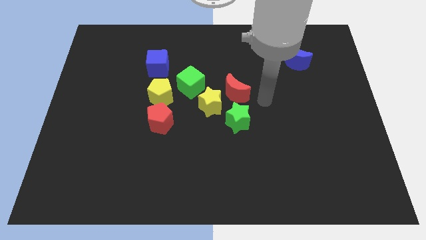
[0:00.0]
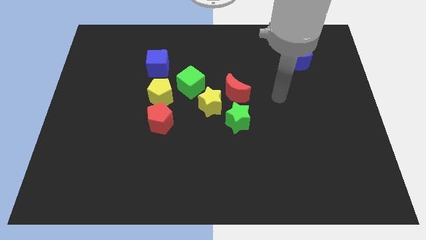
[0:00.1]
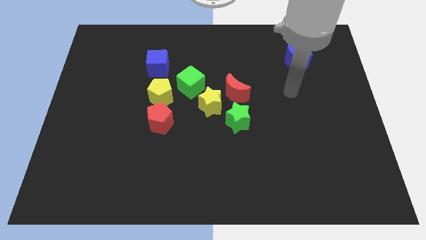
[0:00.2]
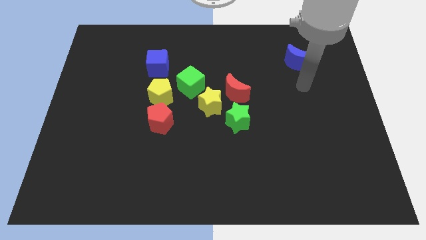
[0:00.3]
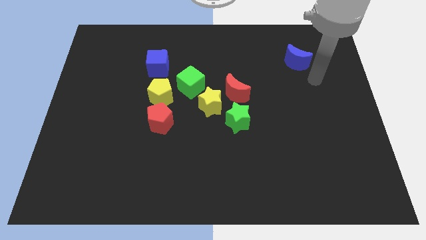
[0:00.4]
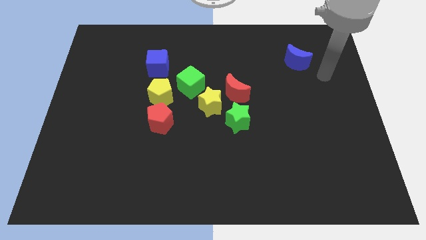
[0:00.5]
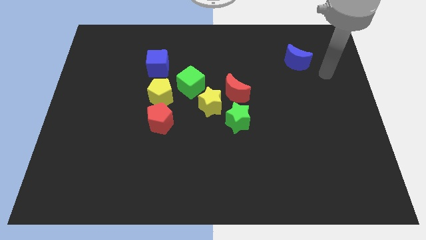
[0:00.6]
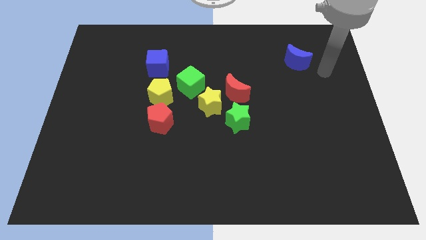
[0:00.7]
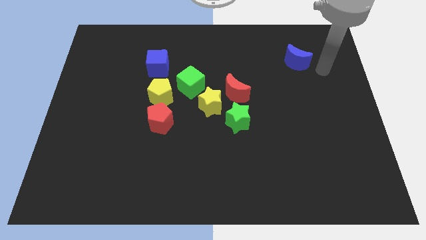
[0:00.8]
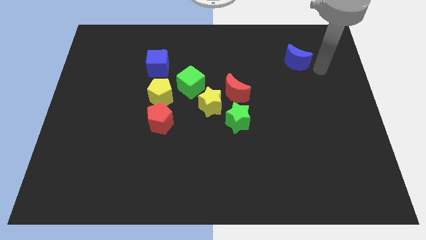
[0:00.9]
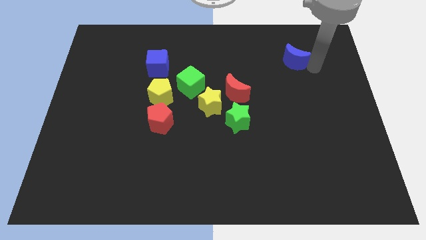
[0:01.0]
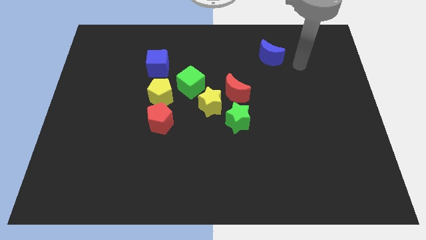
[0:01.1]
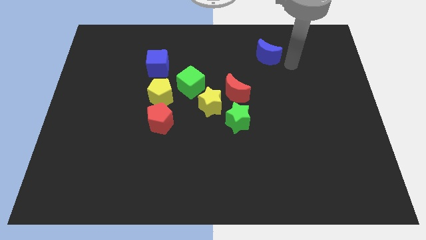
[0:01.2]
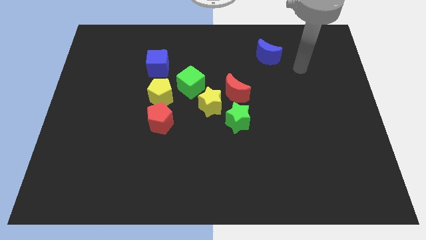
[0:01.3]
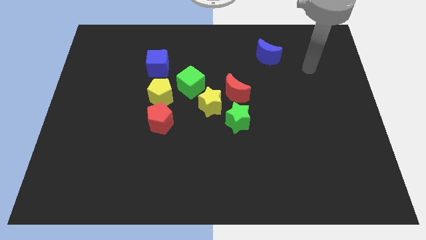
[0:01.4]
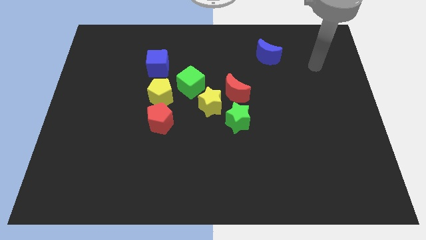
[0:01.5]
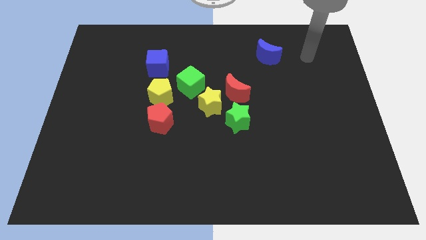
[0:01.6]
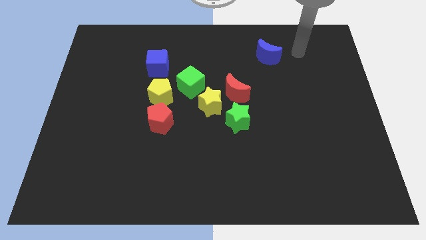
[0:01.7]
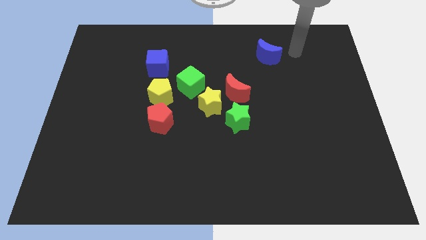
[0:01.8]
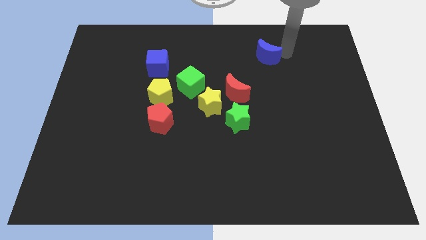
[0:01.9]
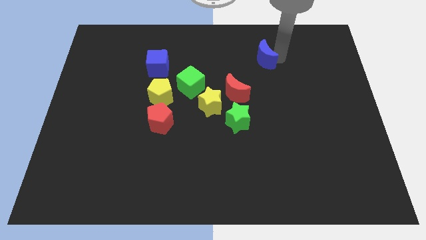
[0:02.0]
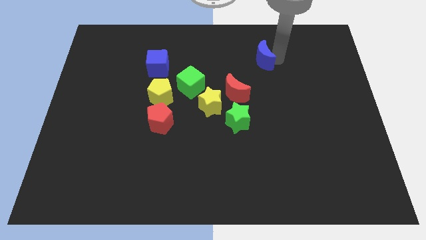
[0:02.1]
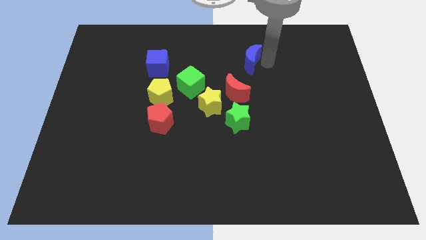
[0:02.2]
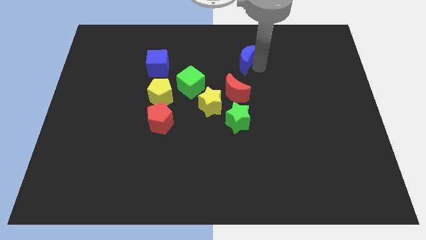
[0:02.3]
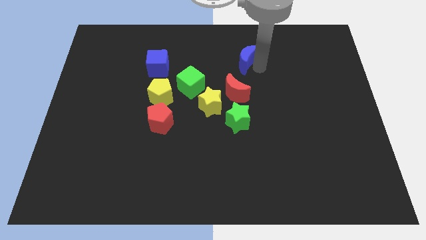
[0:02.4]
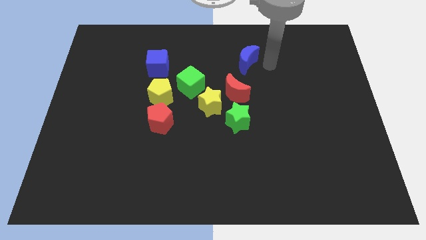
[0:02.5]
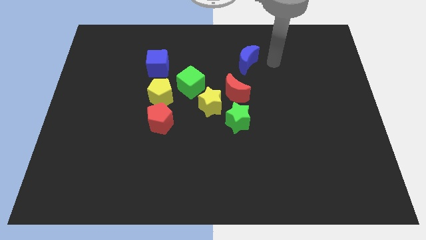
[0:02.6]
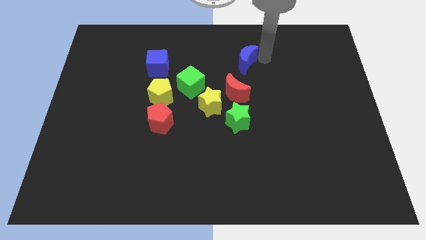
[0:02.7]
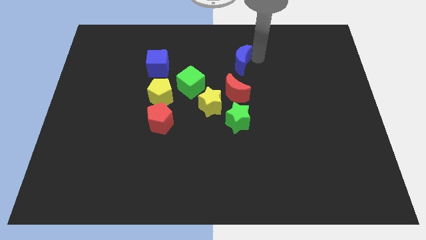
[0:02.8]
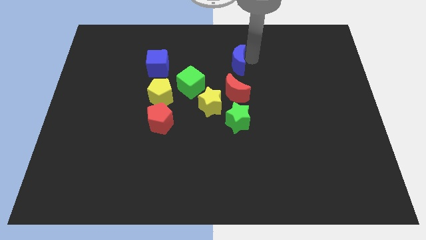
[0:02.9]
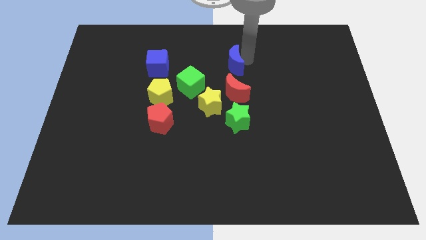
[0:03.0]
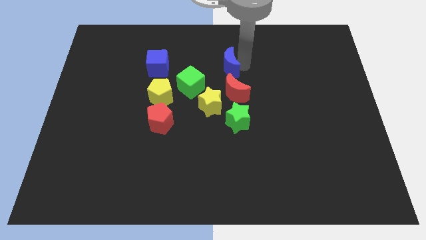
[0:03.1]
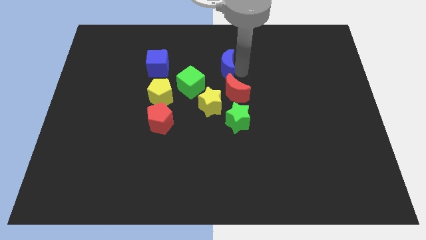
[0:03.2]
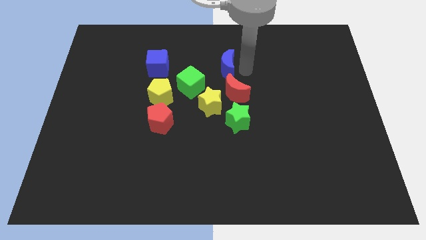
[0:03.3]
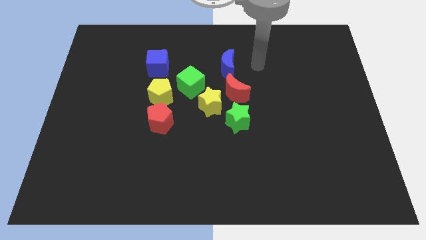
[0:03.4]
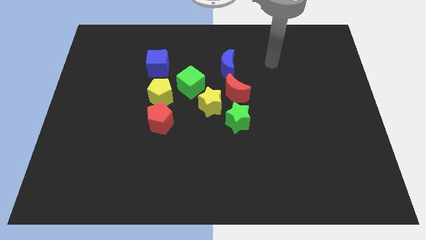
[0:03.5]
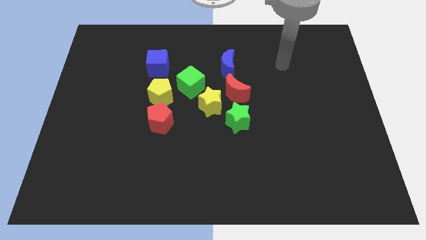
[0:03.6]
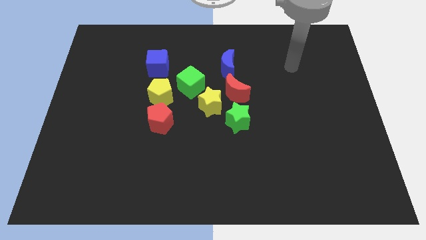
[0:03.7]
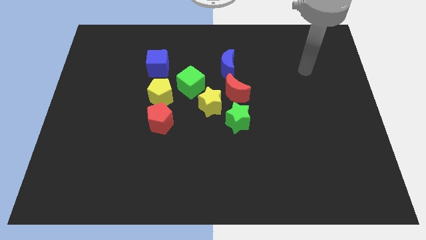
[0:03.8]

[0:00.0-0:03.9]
push the blue crescent to the top right of the green cube

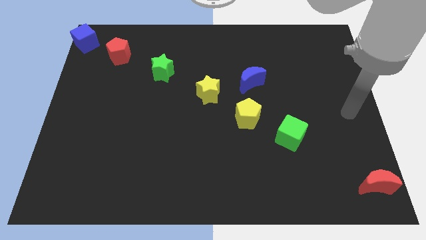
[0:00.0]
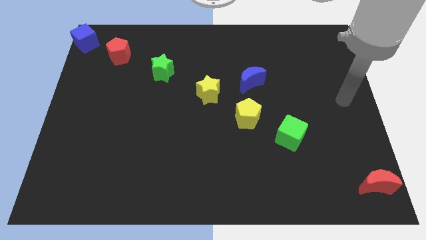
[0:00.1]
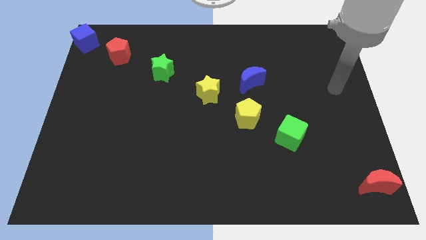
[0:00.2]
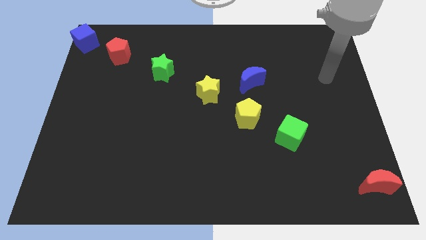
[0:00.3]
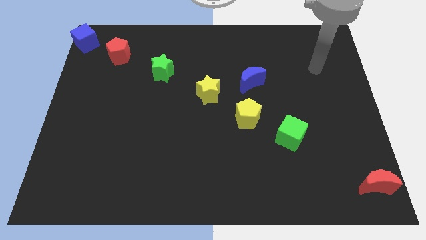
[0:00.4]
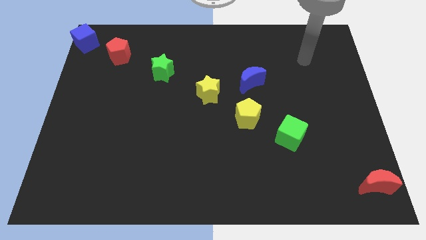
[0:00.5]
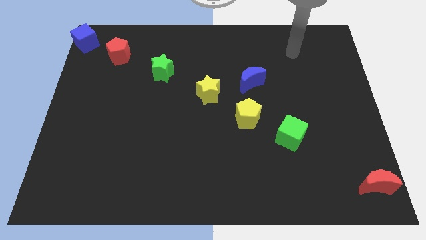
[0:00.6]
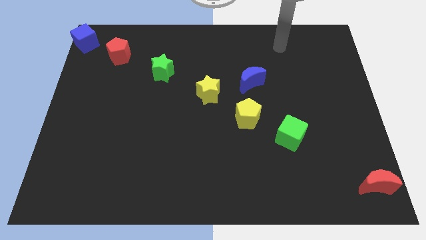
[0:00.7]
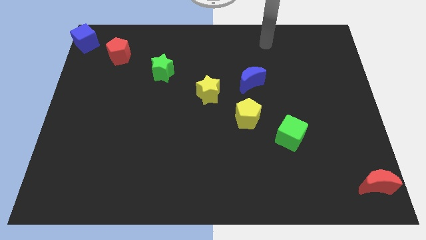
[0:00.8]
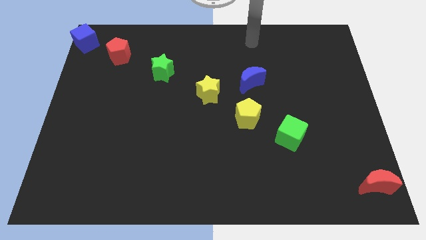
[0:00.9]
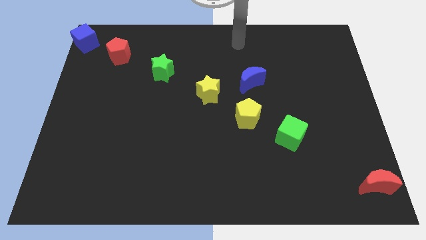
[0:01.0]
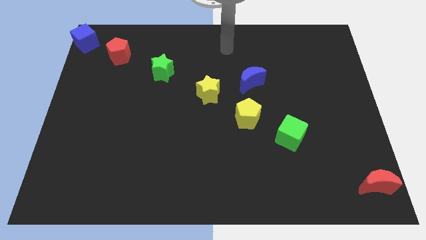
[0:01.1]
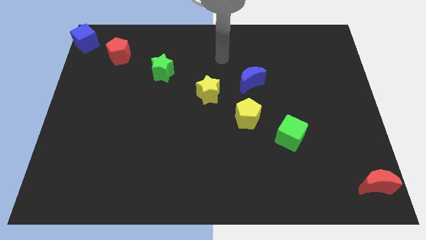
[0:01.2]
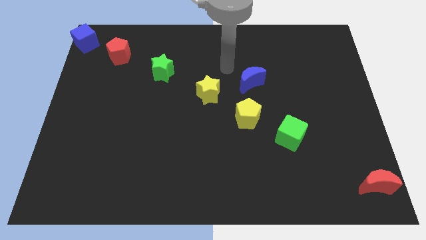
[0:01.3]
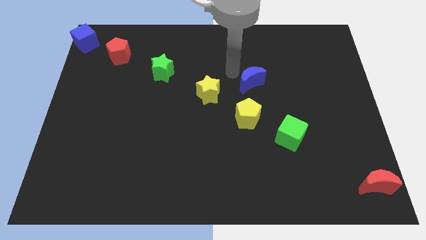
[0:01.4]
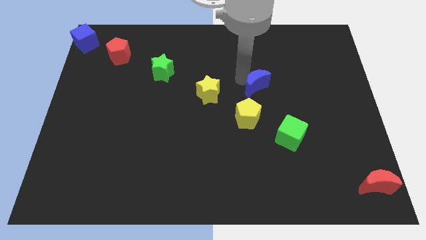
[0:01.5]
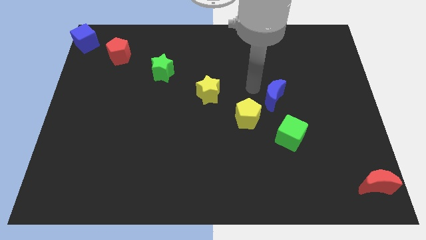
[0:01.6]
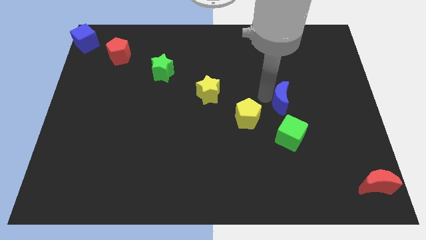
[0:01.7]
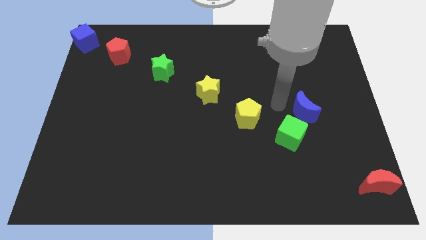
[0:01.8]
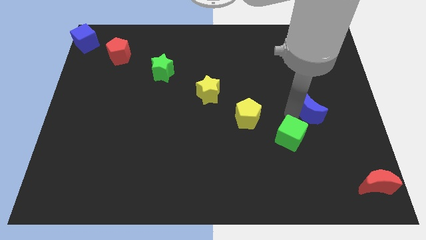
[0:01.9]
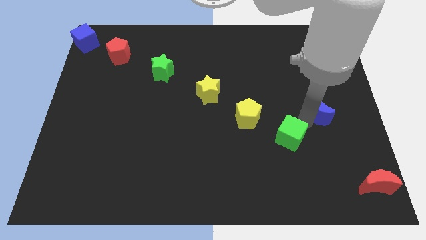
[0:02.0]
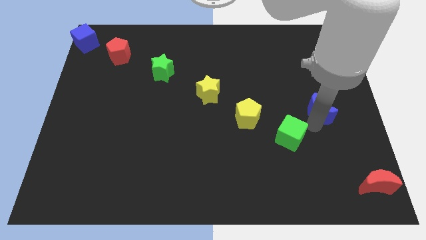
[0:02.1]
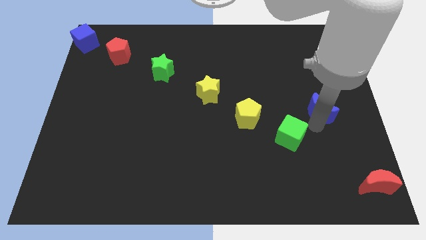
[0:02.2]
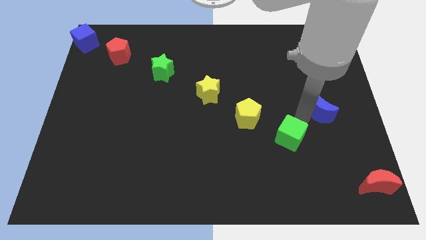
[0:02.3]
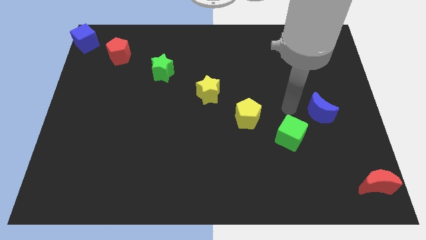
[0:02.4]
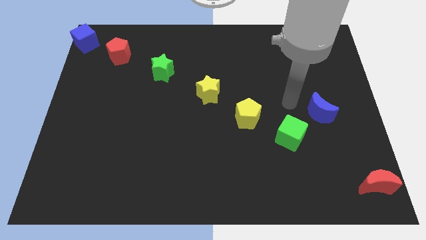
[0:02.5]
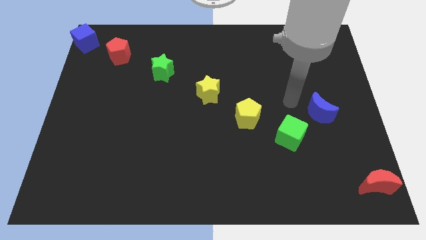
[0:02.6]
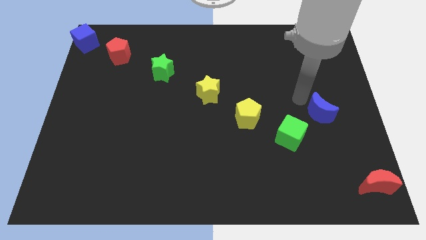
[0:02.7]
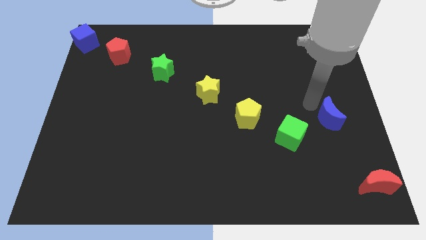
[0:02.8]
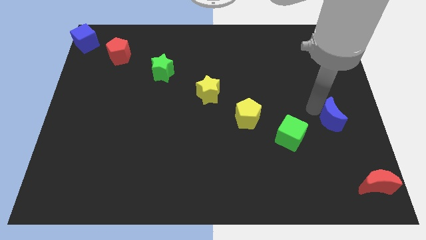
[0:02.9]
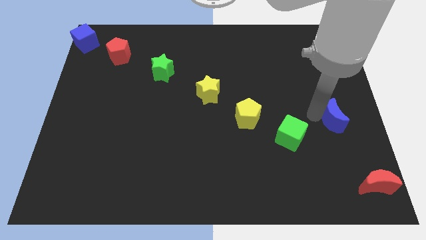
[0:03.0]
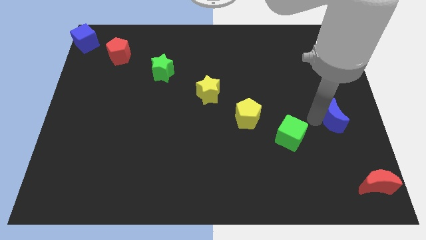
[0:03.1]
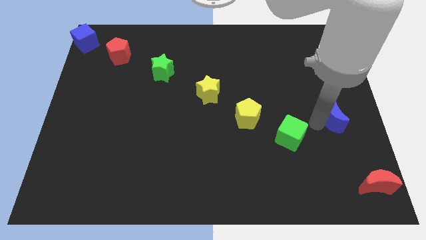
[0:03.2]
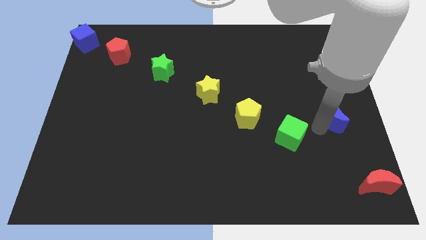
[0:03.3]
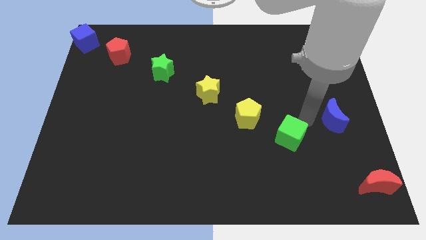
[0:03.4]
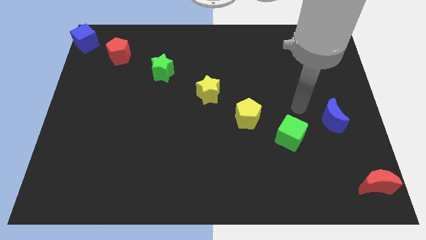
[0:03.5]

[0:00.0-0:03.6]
push the blue crescent above the green cube

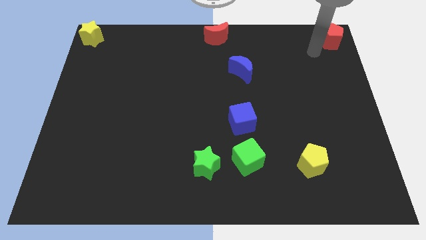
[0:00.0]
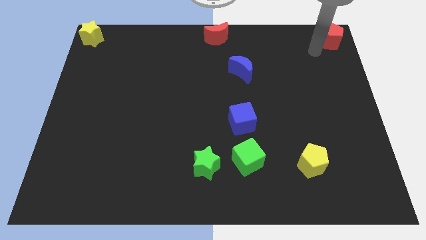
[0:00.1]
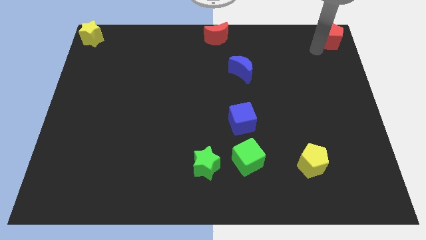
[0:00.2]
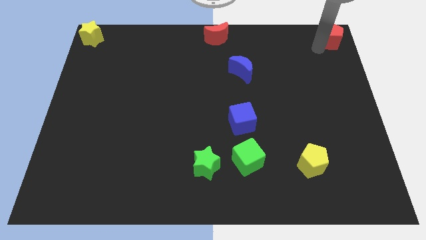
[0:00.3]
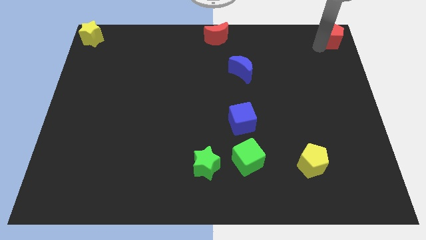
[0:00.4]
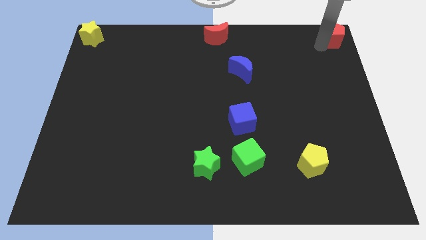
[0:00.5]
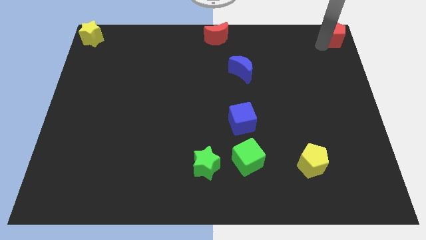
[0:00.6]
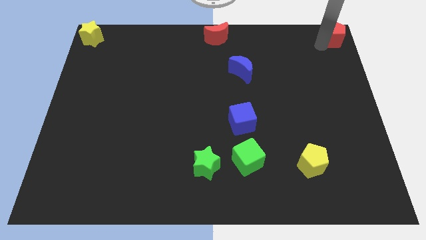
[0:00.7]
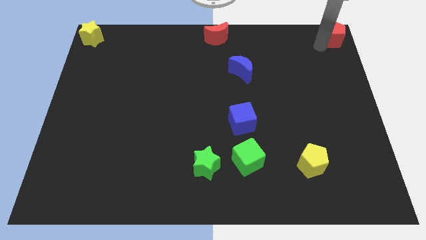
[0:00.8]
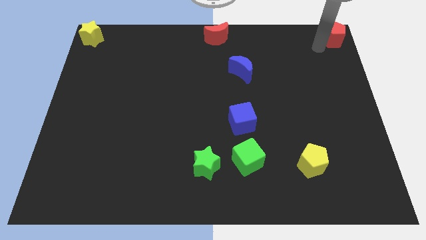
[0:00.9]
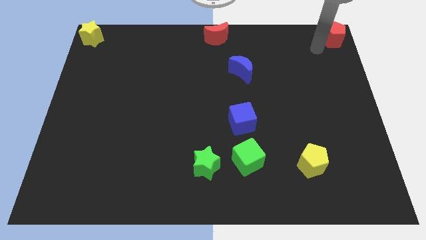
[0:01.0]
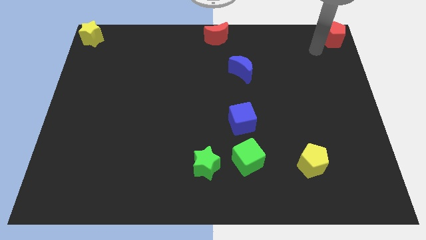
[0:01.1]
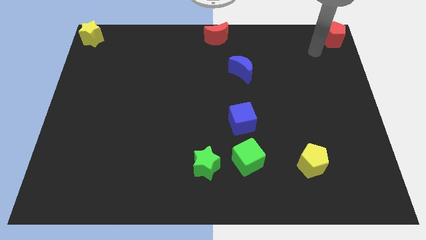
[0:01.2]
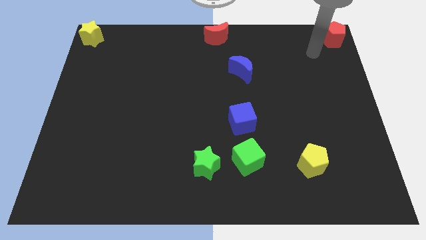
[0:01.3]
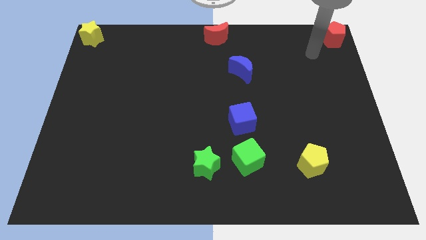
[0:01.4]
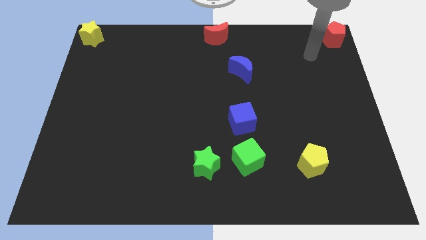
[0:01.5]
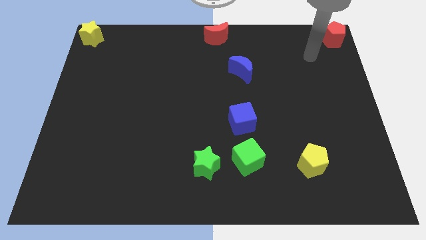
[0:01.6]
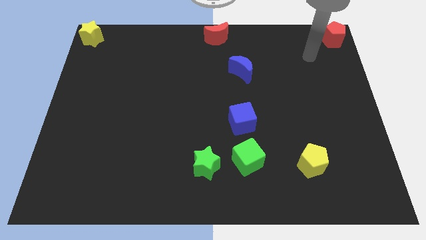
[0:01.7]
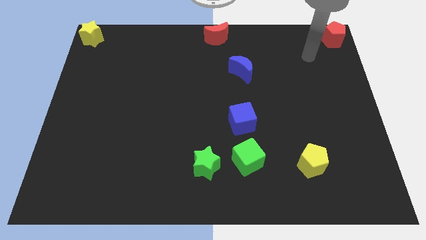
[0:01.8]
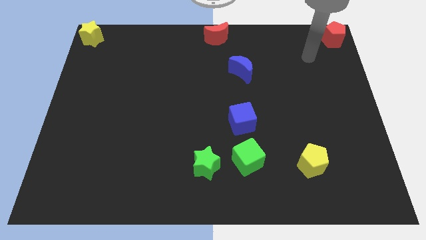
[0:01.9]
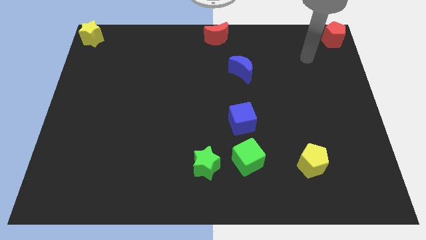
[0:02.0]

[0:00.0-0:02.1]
push the red pentagon to the top right corner of the board
